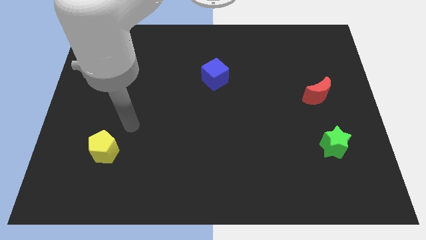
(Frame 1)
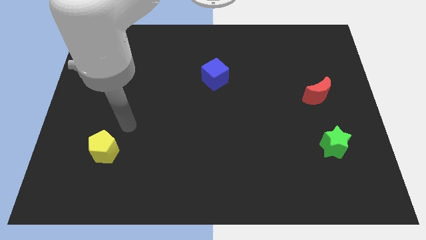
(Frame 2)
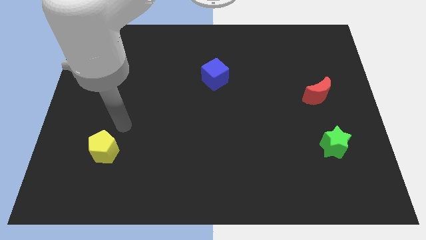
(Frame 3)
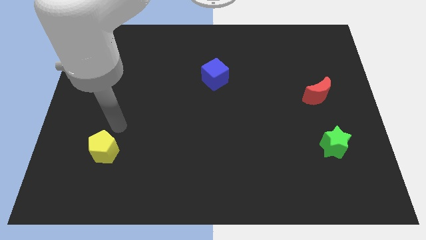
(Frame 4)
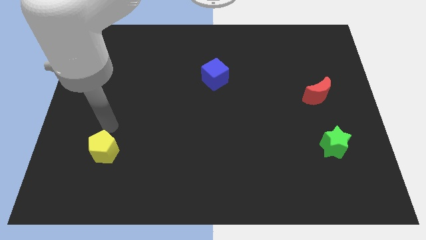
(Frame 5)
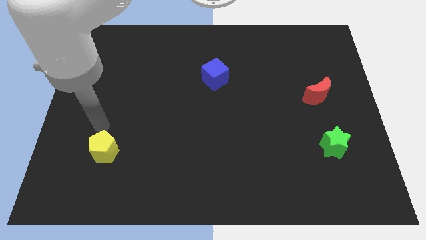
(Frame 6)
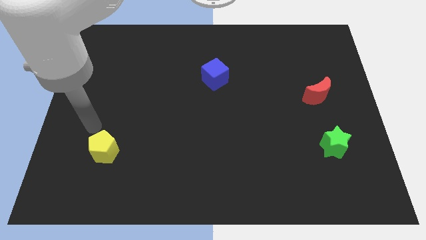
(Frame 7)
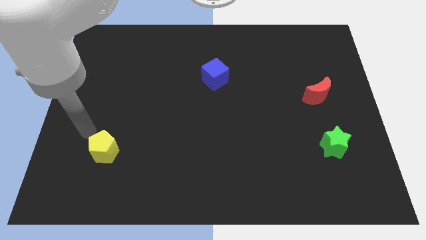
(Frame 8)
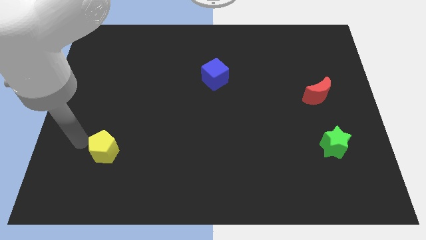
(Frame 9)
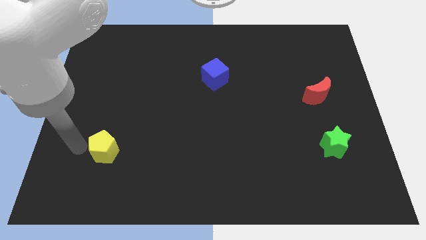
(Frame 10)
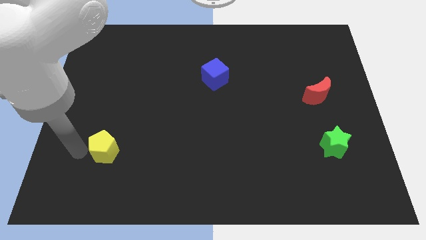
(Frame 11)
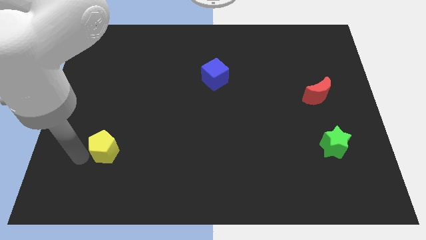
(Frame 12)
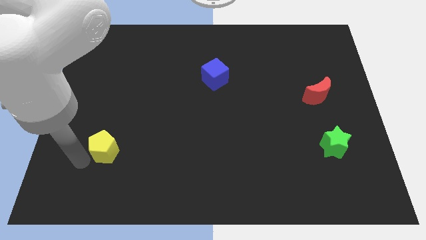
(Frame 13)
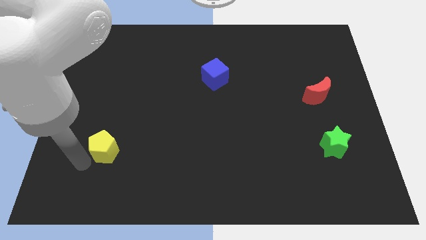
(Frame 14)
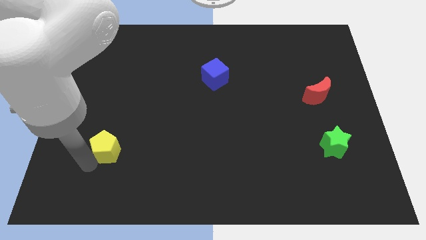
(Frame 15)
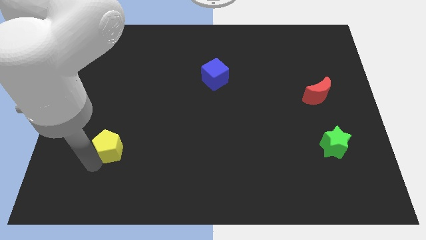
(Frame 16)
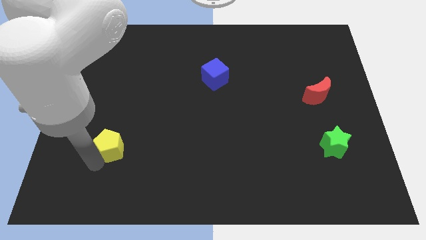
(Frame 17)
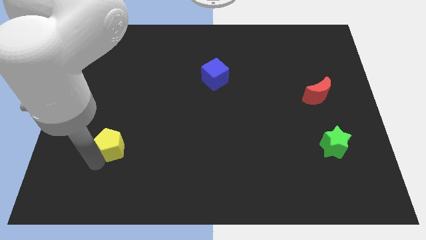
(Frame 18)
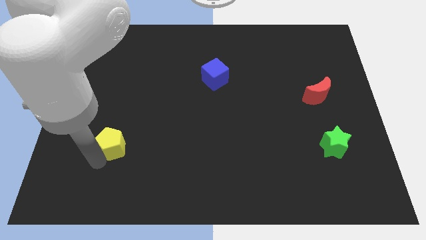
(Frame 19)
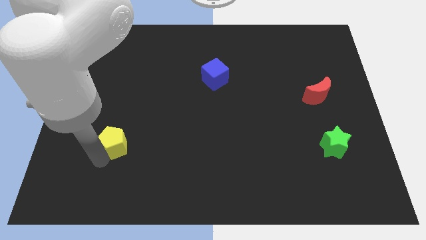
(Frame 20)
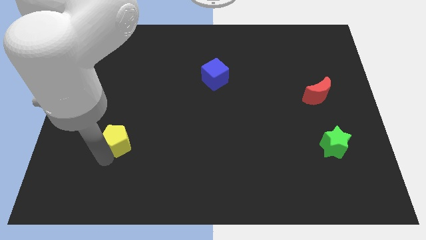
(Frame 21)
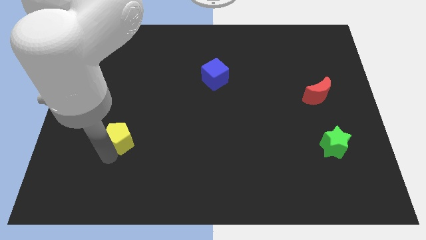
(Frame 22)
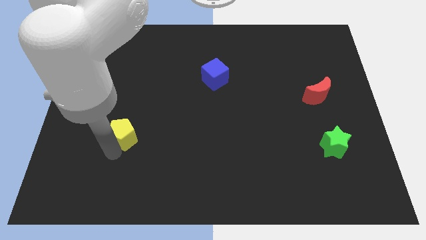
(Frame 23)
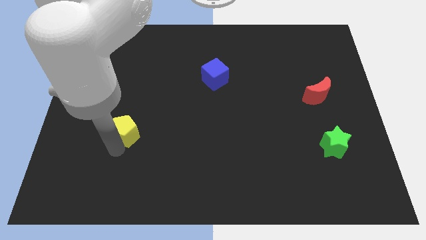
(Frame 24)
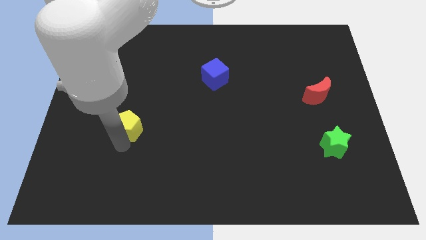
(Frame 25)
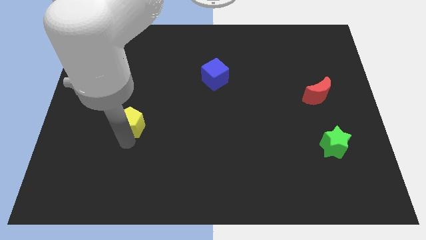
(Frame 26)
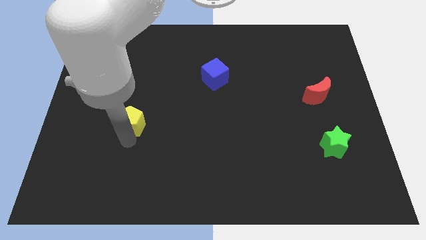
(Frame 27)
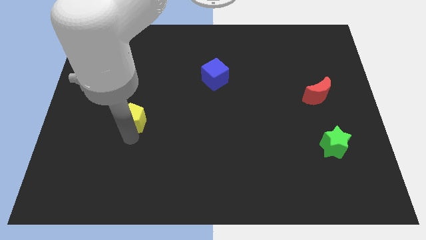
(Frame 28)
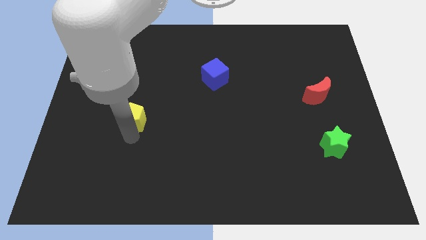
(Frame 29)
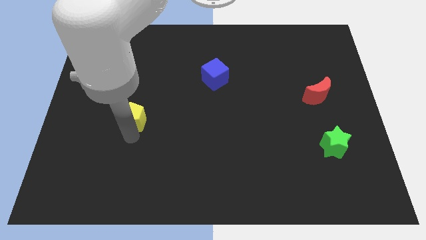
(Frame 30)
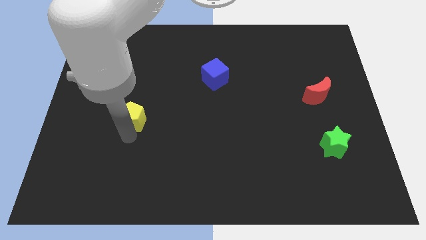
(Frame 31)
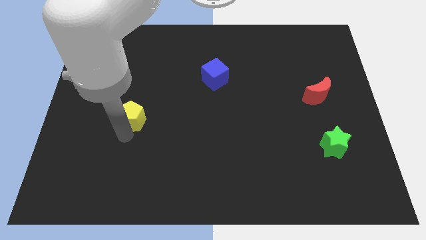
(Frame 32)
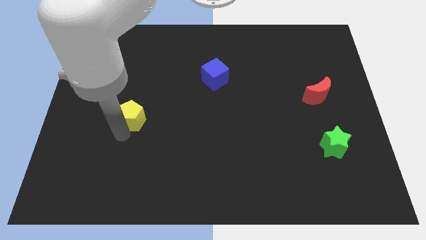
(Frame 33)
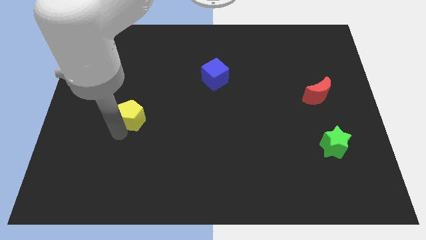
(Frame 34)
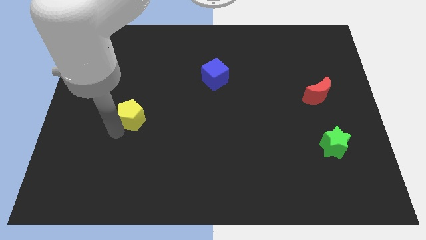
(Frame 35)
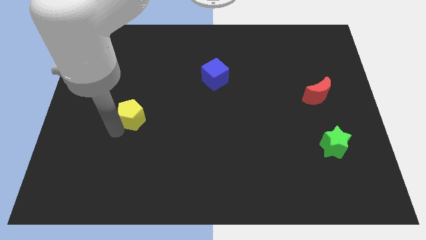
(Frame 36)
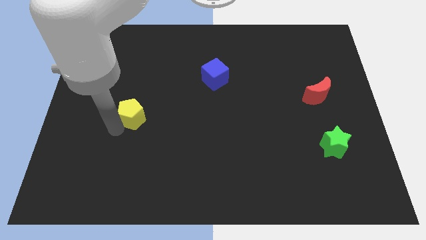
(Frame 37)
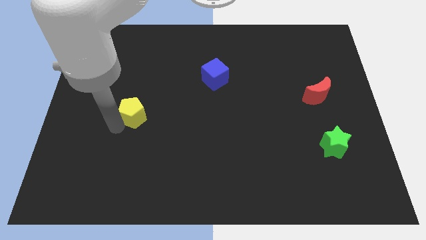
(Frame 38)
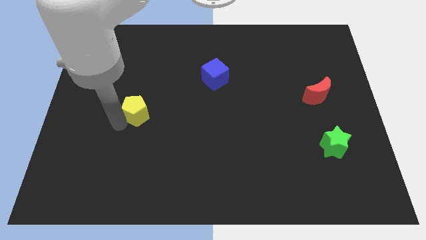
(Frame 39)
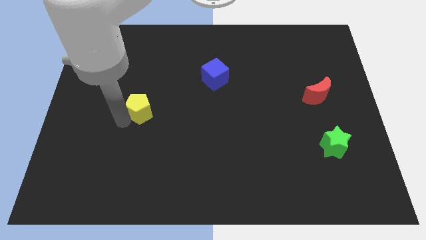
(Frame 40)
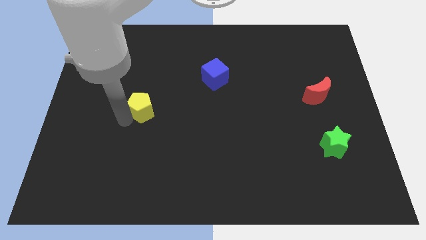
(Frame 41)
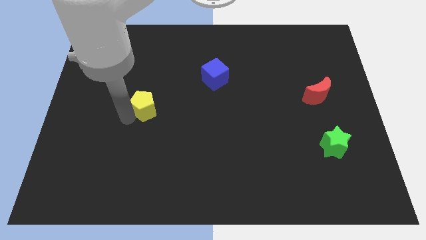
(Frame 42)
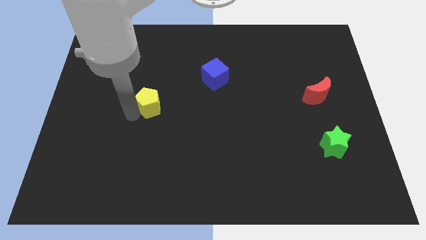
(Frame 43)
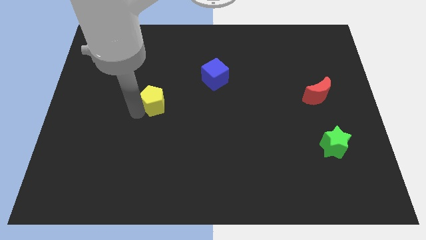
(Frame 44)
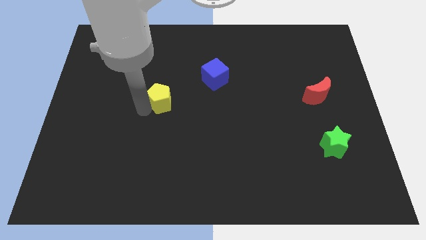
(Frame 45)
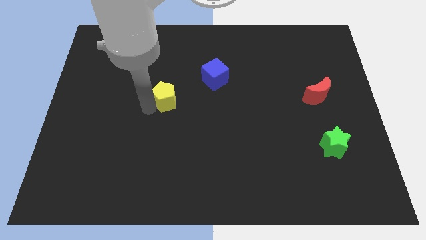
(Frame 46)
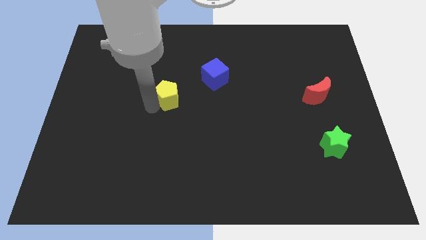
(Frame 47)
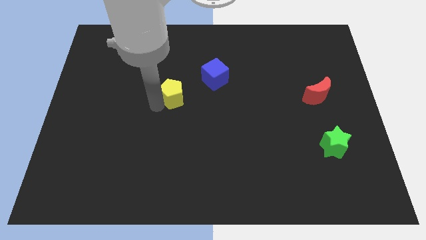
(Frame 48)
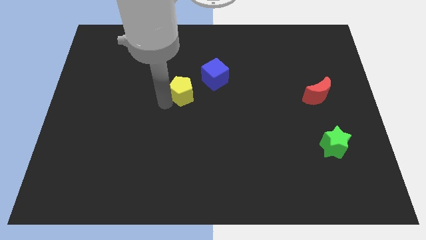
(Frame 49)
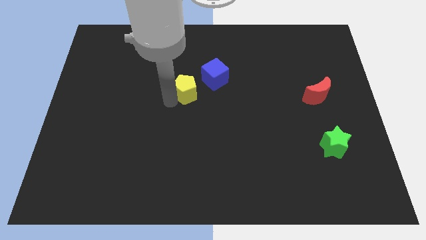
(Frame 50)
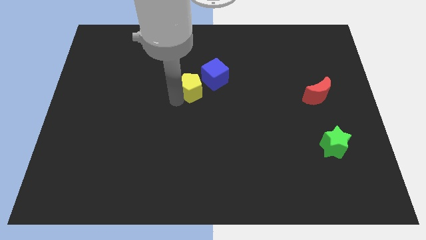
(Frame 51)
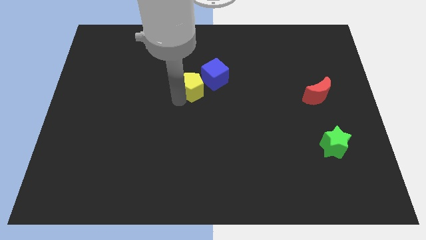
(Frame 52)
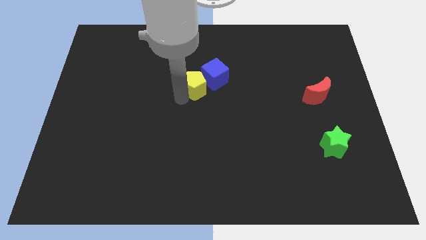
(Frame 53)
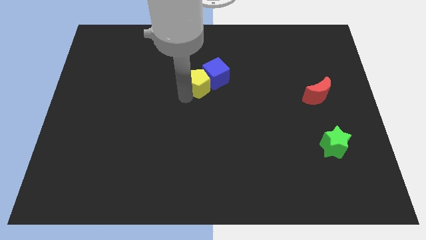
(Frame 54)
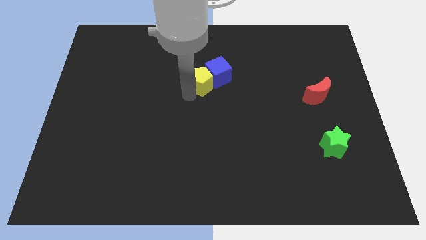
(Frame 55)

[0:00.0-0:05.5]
move the yellow pentagon to the cube

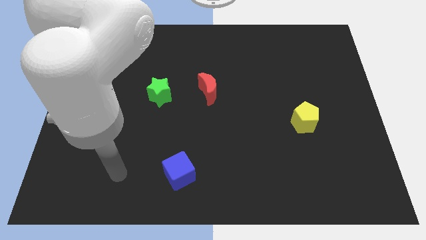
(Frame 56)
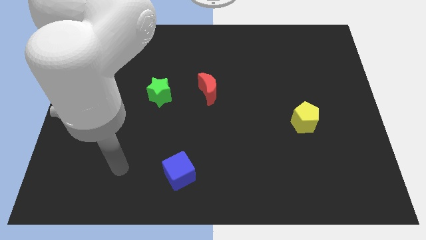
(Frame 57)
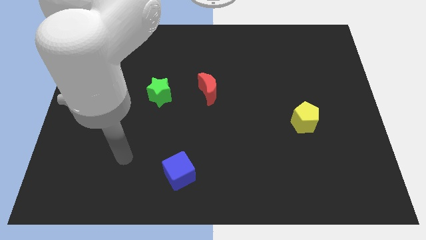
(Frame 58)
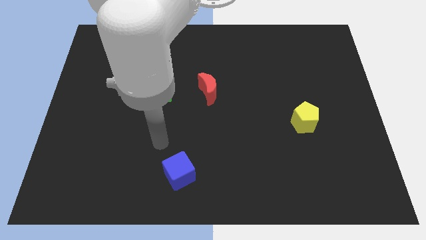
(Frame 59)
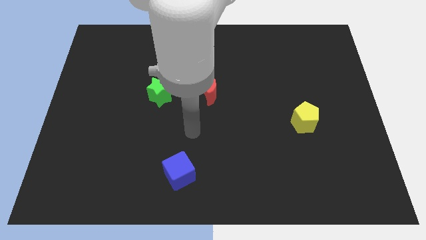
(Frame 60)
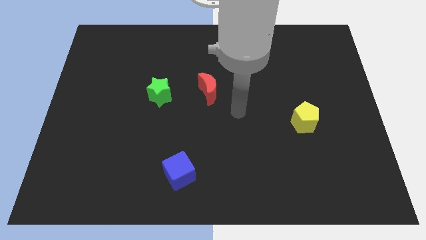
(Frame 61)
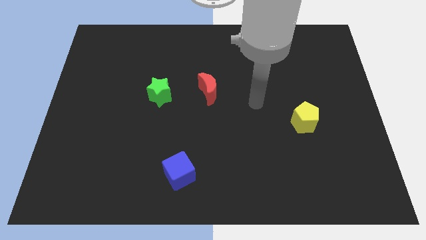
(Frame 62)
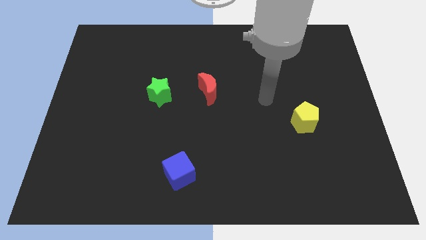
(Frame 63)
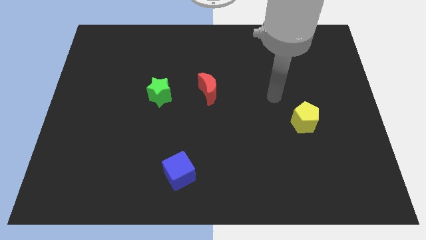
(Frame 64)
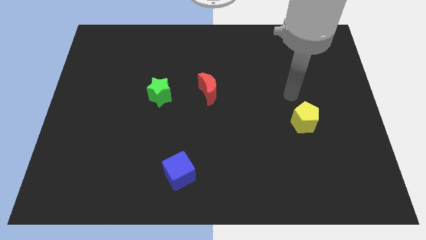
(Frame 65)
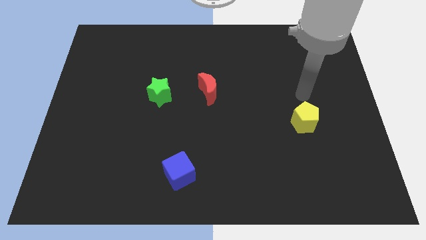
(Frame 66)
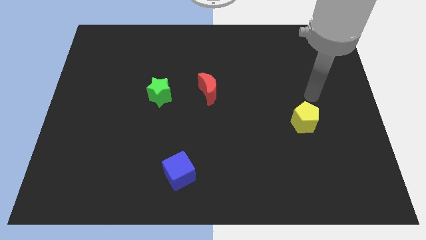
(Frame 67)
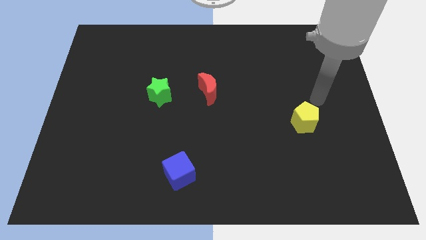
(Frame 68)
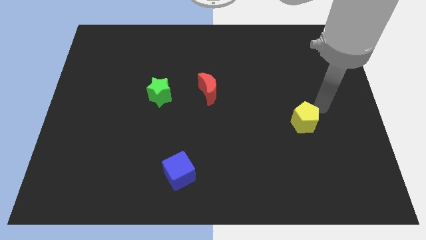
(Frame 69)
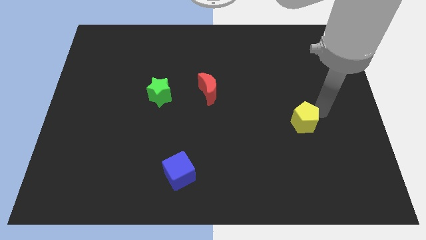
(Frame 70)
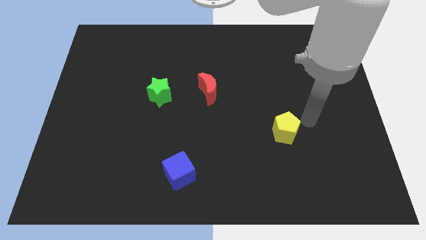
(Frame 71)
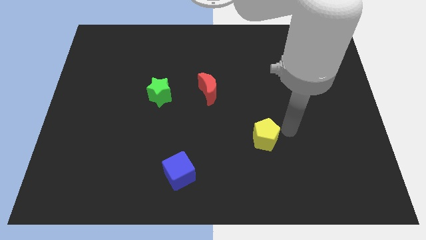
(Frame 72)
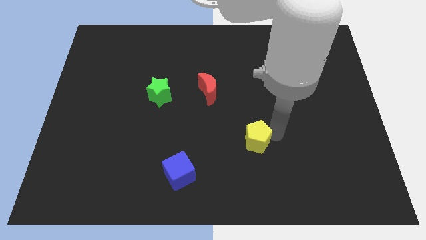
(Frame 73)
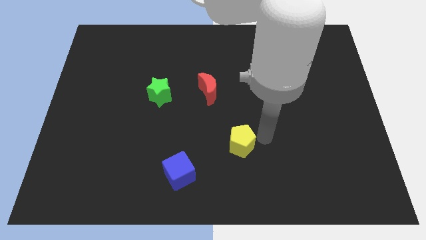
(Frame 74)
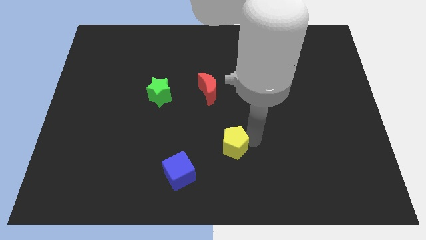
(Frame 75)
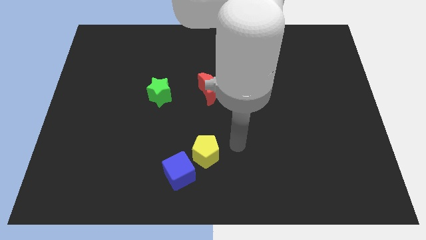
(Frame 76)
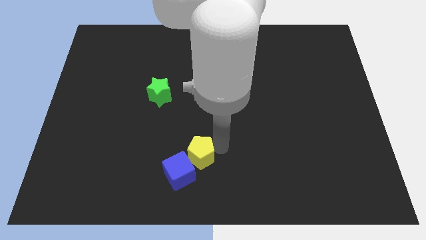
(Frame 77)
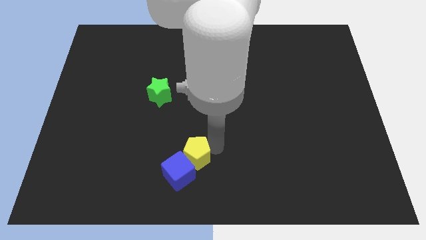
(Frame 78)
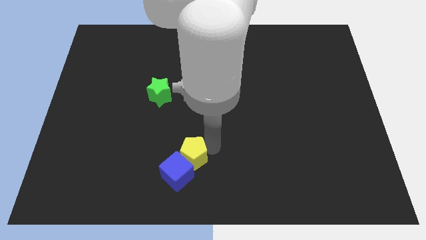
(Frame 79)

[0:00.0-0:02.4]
slide the yellow block close to the blue cube

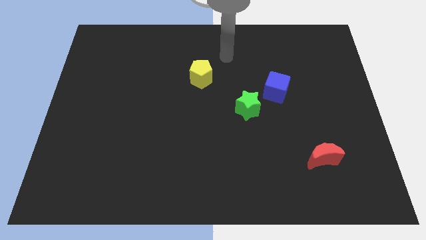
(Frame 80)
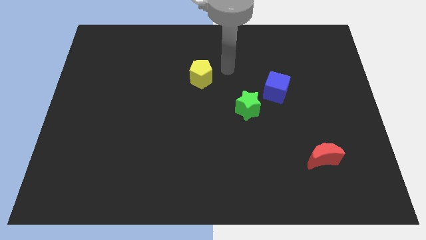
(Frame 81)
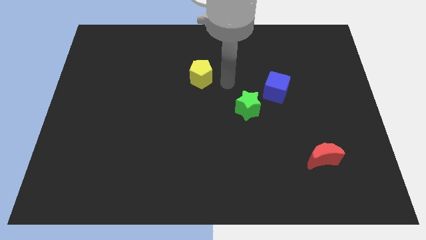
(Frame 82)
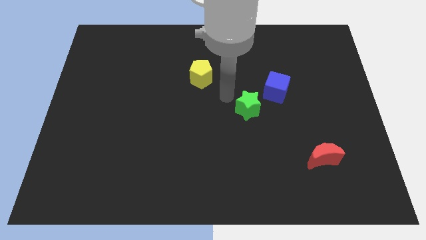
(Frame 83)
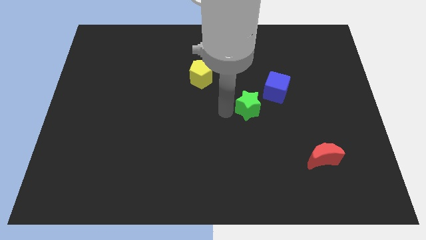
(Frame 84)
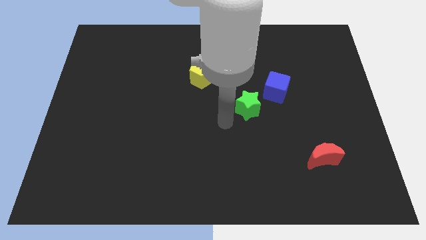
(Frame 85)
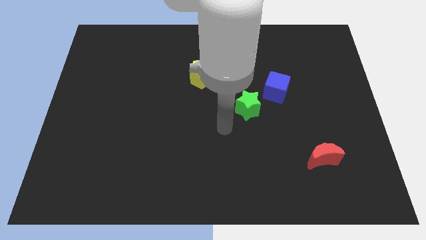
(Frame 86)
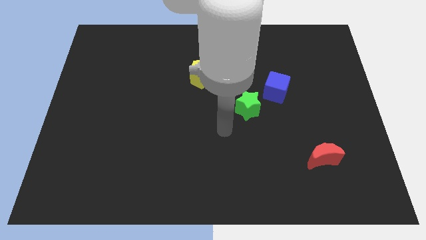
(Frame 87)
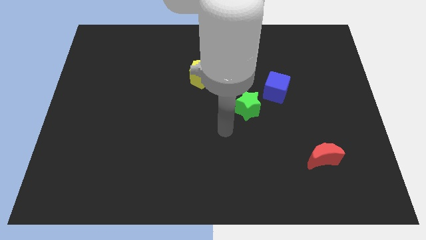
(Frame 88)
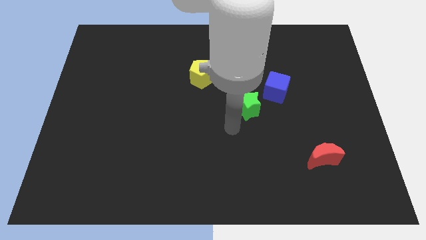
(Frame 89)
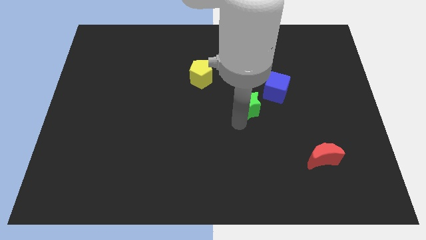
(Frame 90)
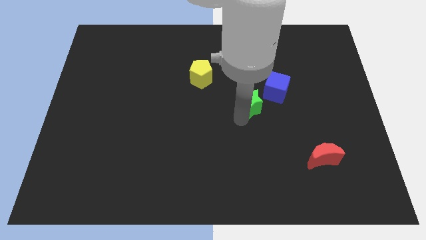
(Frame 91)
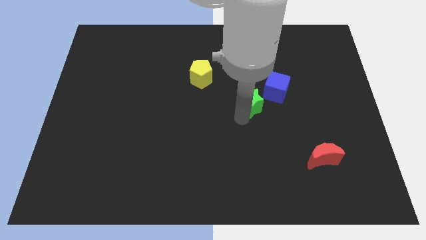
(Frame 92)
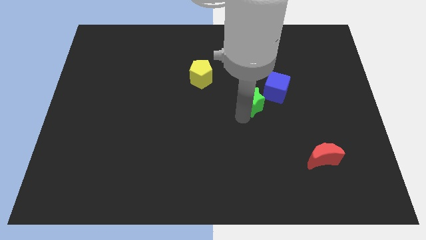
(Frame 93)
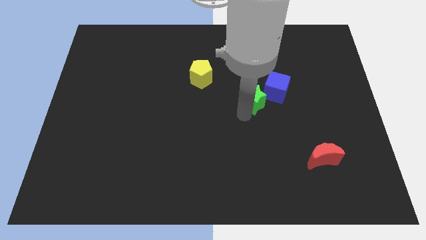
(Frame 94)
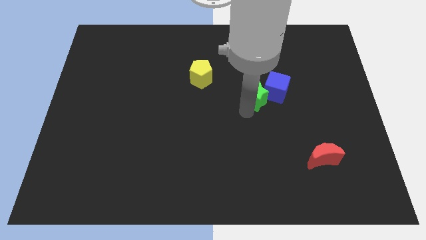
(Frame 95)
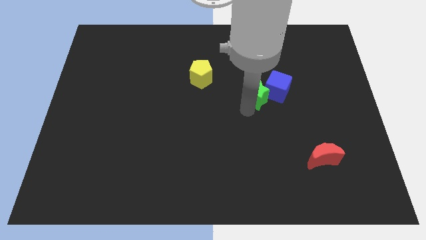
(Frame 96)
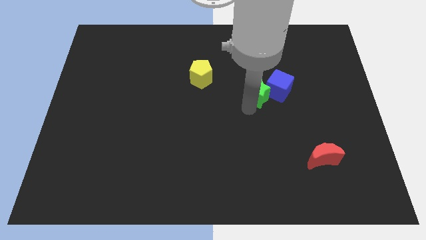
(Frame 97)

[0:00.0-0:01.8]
move the green star close to the blue cube
